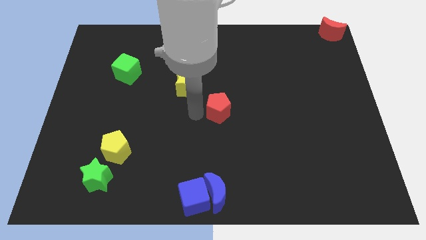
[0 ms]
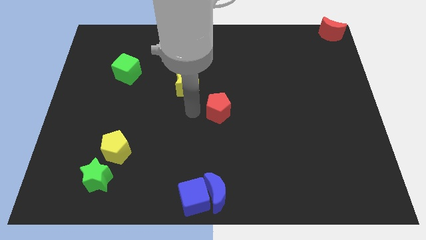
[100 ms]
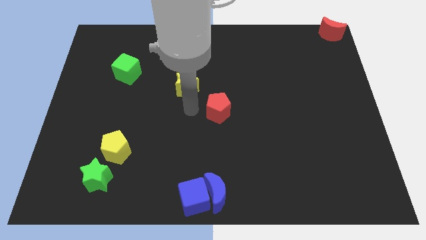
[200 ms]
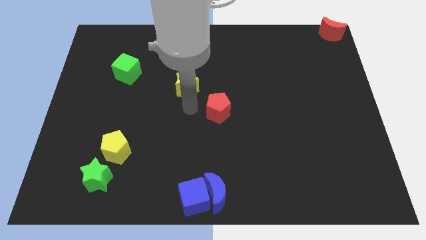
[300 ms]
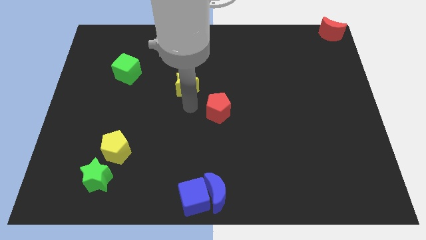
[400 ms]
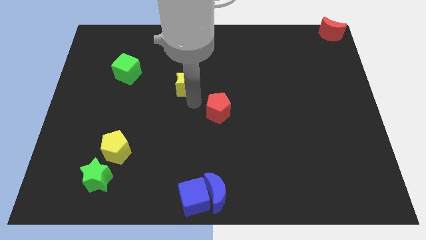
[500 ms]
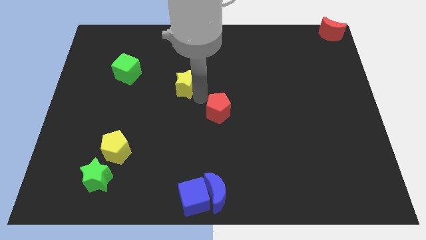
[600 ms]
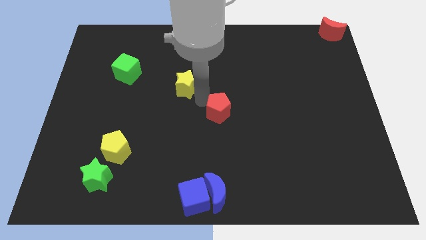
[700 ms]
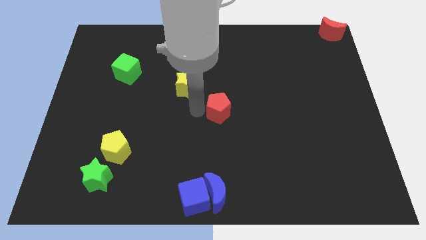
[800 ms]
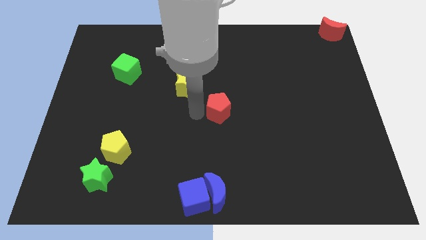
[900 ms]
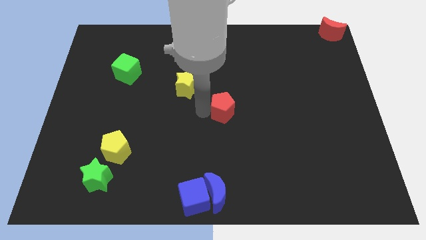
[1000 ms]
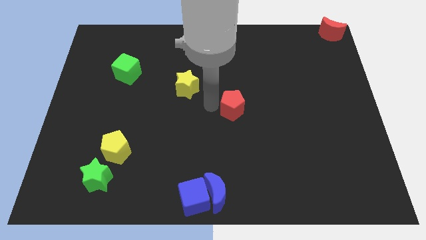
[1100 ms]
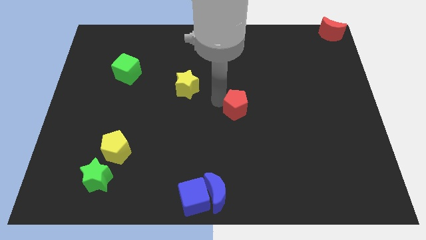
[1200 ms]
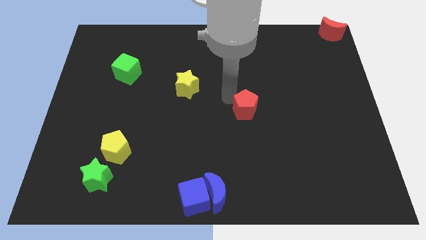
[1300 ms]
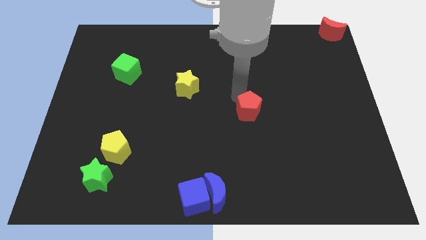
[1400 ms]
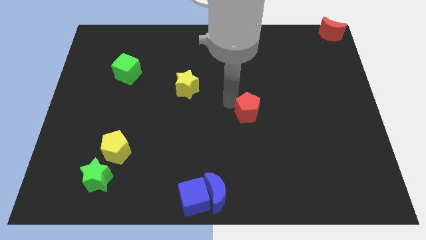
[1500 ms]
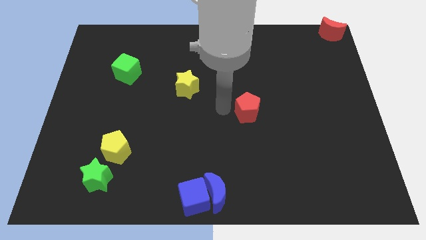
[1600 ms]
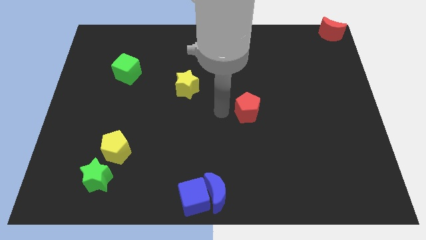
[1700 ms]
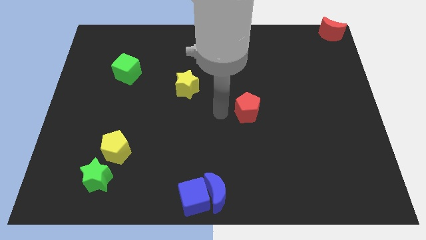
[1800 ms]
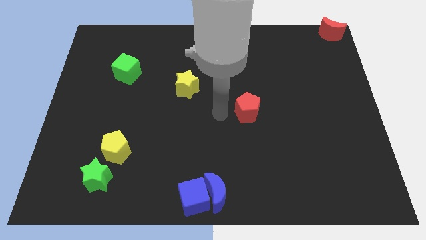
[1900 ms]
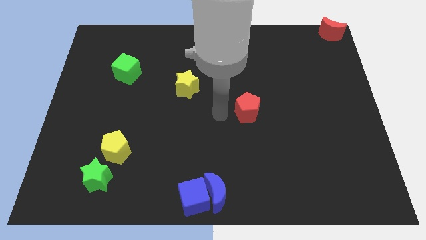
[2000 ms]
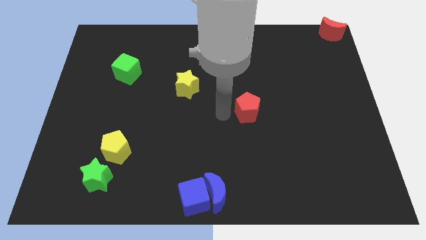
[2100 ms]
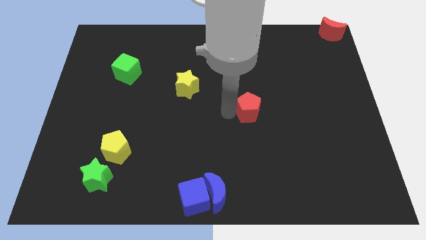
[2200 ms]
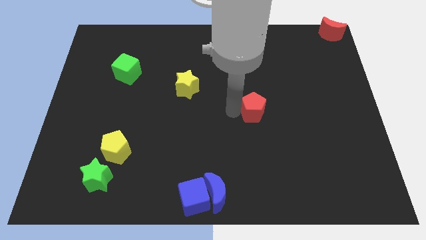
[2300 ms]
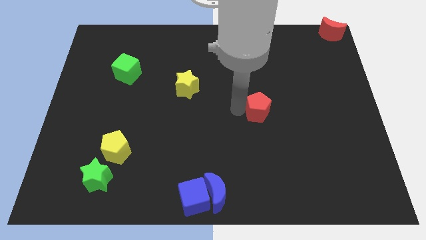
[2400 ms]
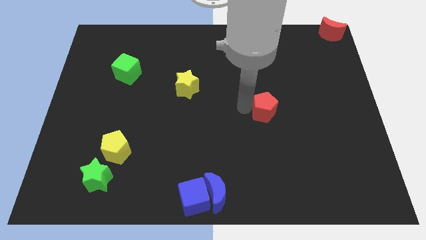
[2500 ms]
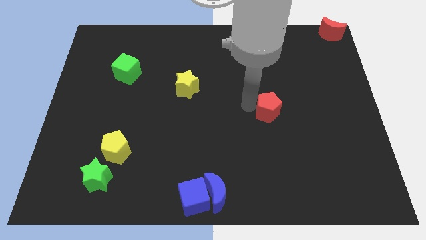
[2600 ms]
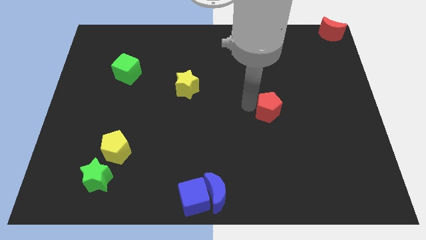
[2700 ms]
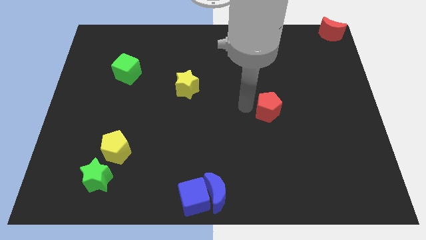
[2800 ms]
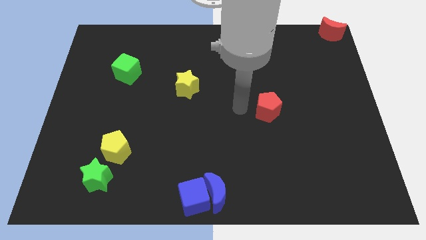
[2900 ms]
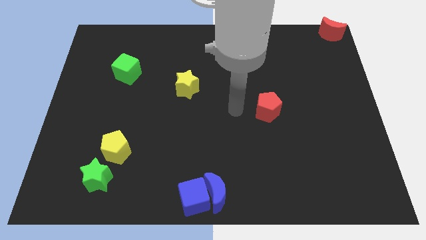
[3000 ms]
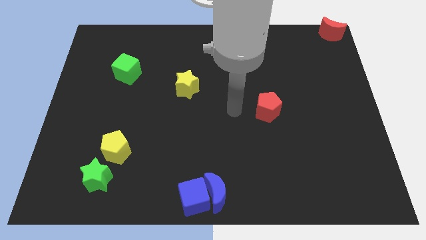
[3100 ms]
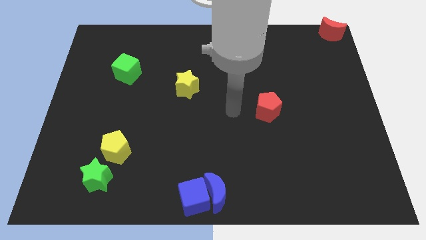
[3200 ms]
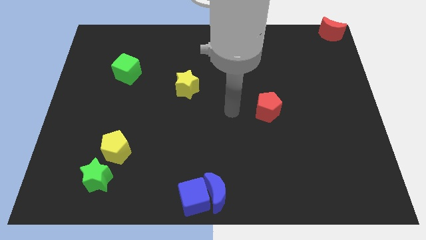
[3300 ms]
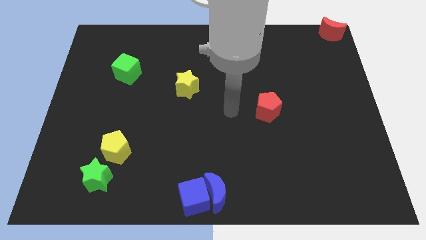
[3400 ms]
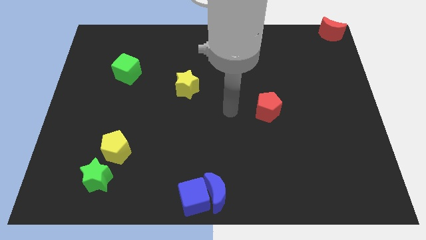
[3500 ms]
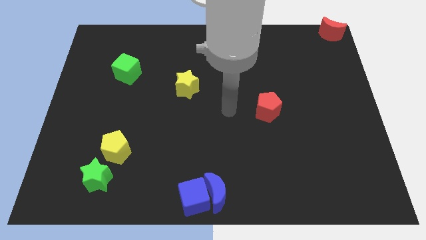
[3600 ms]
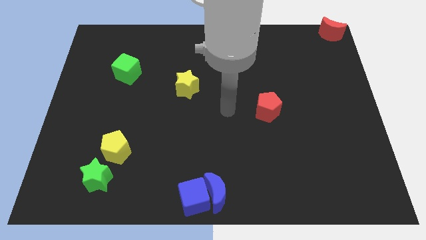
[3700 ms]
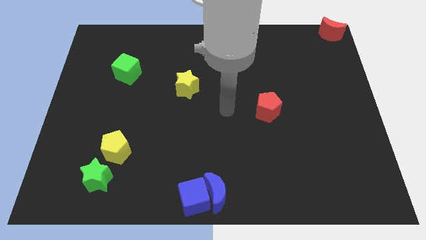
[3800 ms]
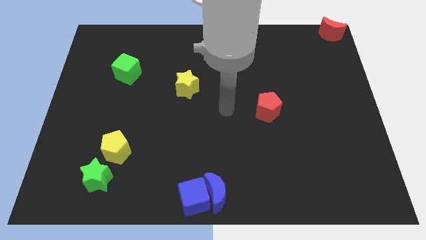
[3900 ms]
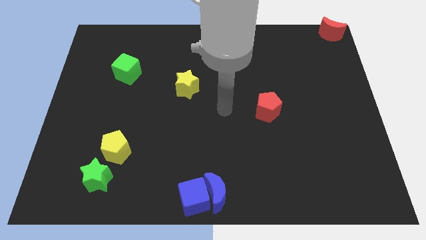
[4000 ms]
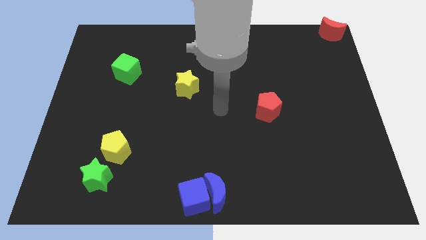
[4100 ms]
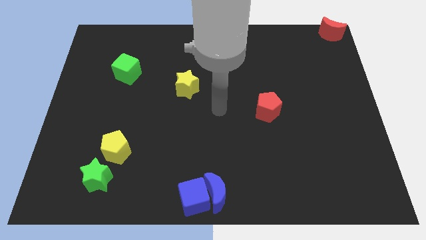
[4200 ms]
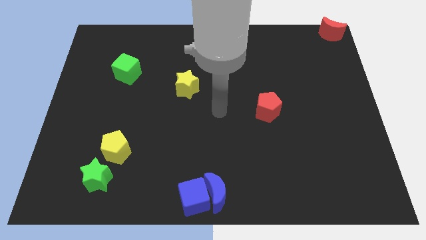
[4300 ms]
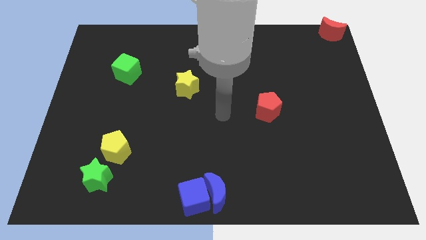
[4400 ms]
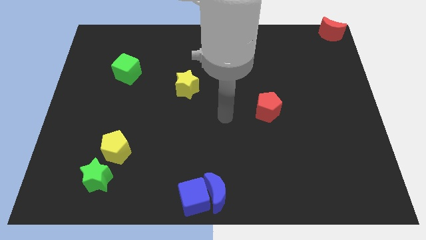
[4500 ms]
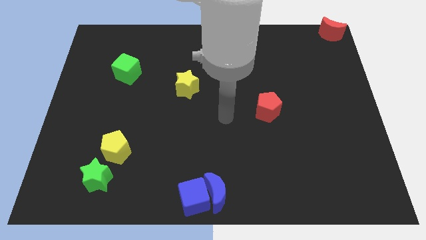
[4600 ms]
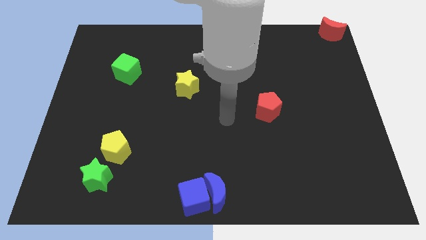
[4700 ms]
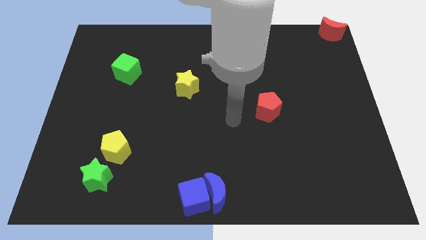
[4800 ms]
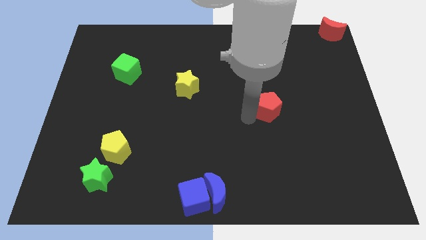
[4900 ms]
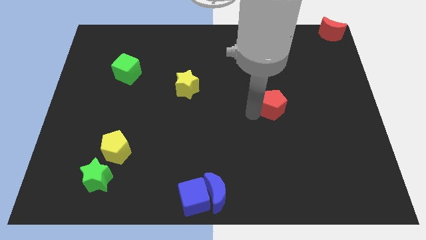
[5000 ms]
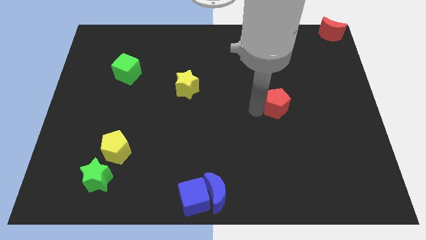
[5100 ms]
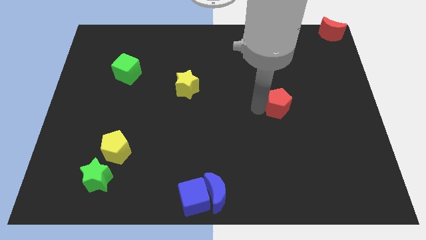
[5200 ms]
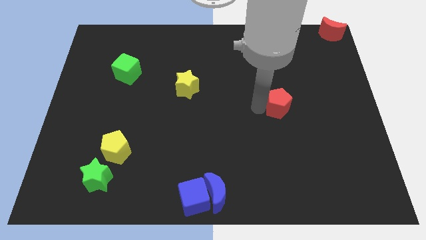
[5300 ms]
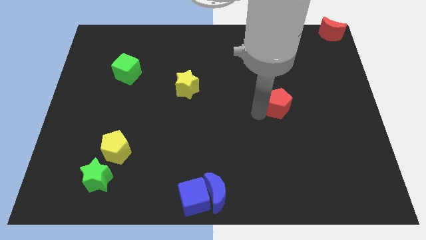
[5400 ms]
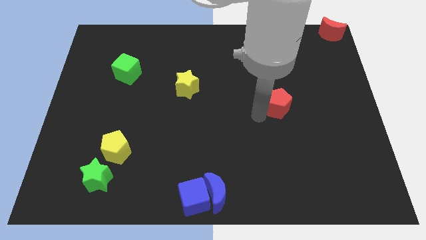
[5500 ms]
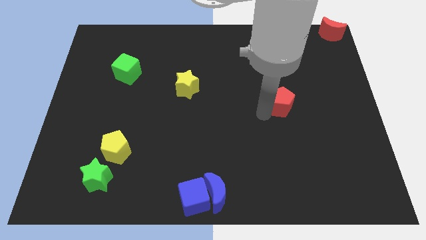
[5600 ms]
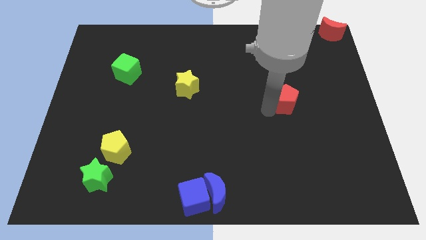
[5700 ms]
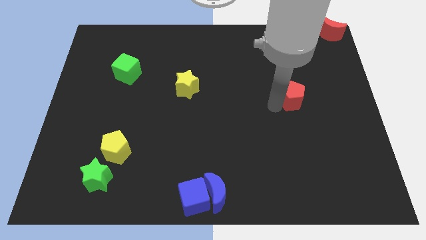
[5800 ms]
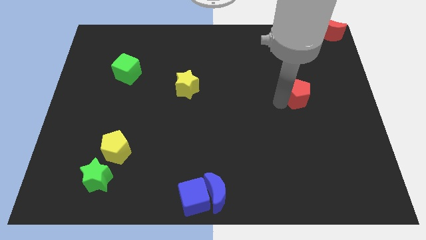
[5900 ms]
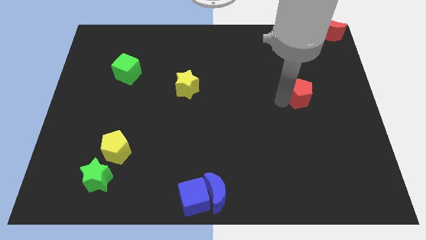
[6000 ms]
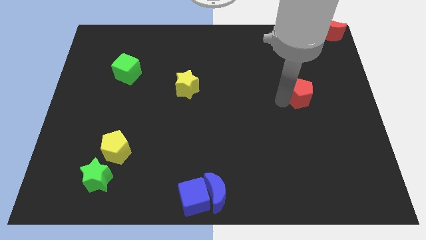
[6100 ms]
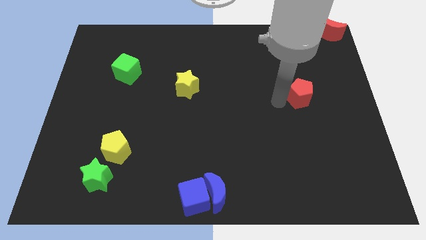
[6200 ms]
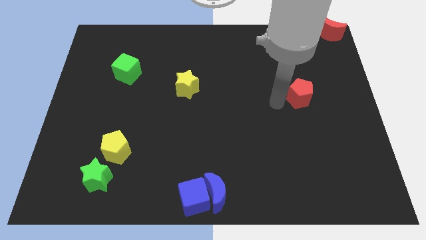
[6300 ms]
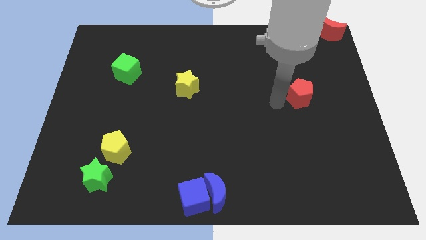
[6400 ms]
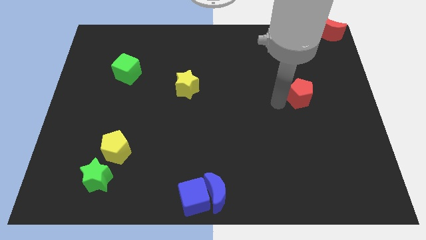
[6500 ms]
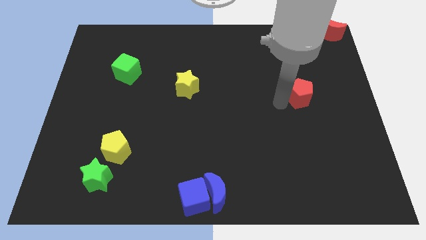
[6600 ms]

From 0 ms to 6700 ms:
place the red pentagon diagonally below the red crescent

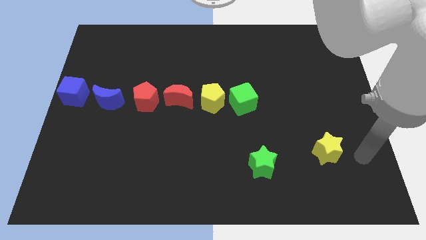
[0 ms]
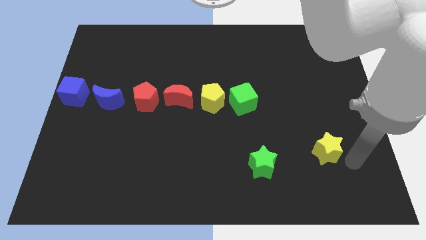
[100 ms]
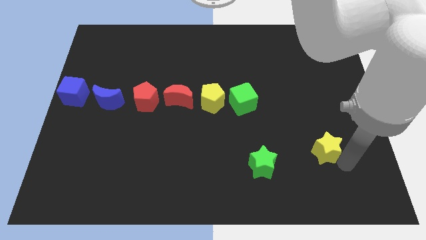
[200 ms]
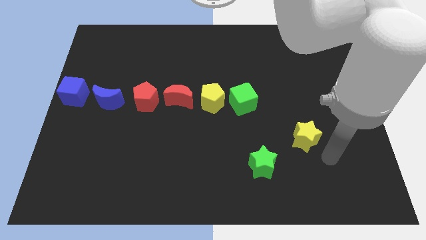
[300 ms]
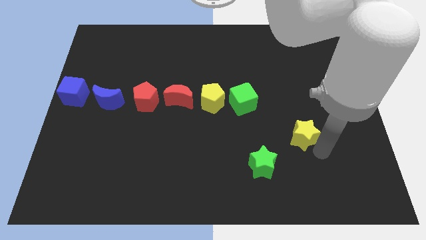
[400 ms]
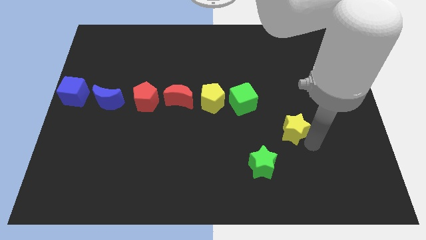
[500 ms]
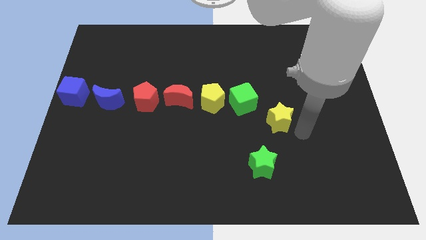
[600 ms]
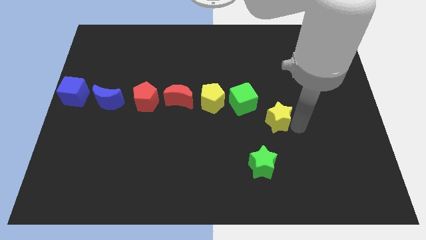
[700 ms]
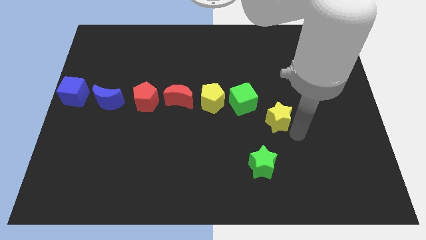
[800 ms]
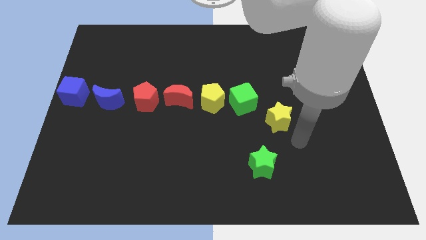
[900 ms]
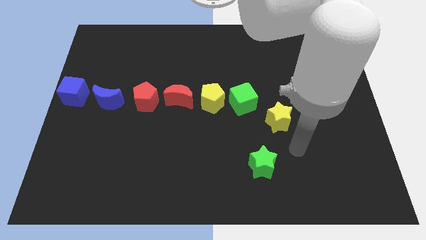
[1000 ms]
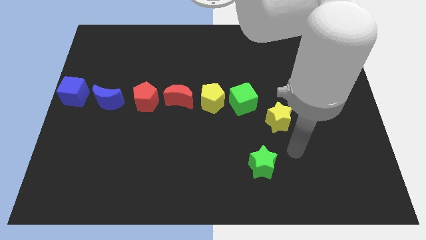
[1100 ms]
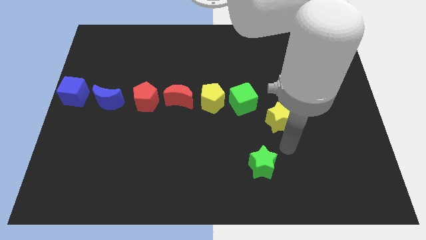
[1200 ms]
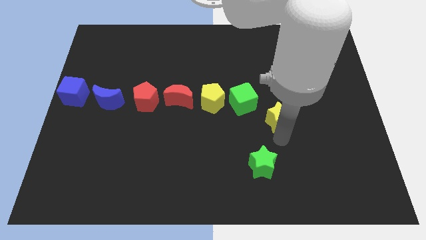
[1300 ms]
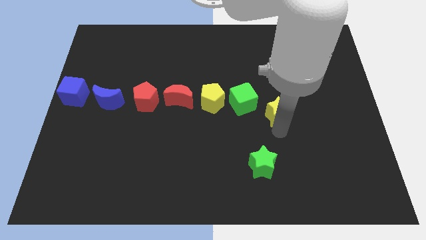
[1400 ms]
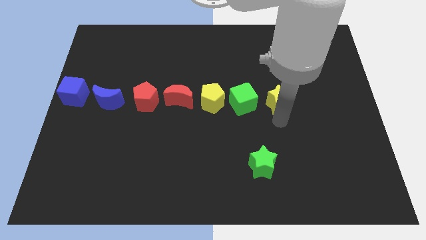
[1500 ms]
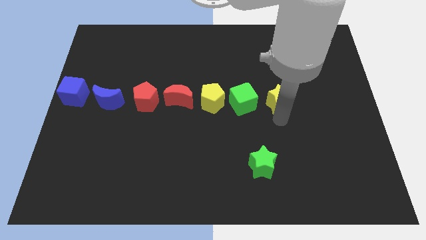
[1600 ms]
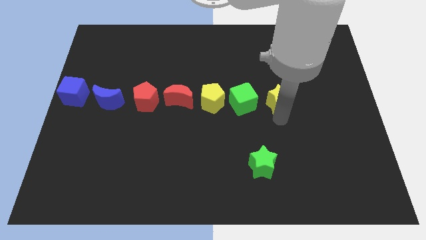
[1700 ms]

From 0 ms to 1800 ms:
move the yellow star to the right side of the green cube

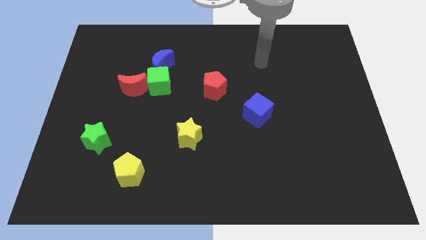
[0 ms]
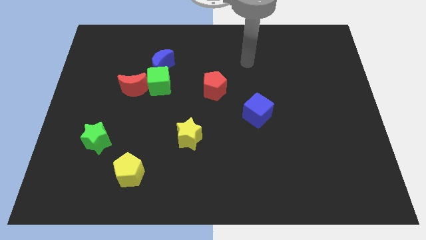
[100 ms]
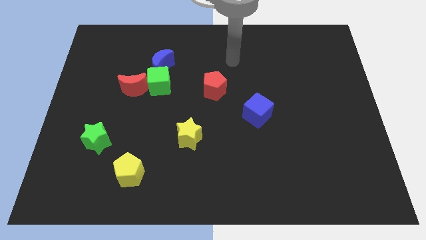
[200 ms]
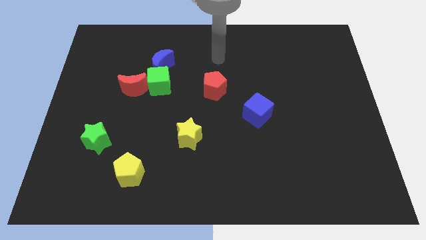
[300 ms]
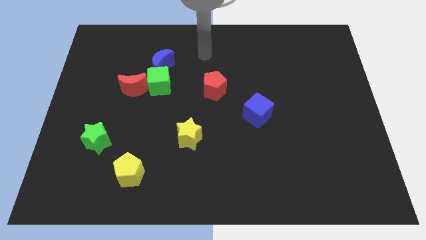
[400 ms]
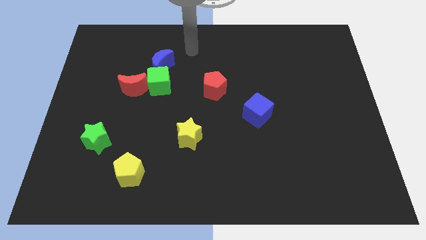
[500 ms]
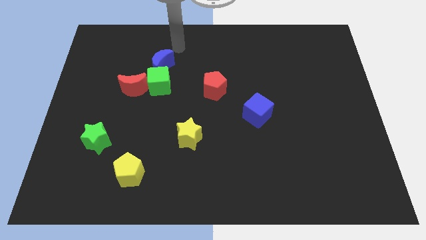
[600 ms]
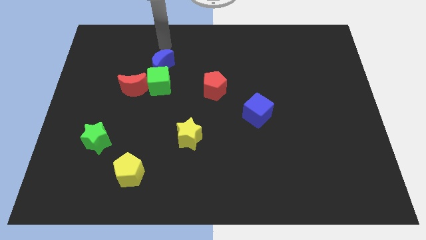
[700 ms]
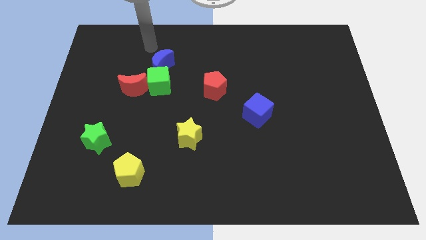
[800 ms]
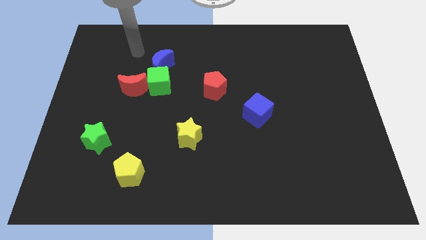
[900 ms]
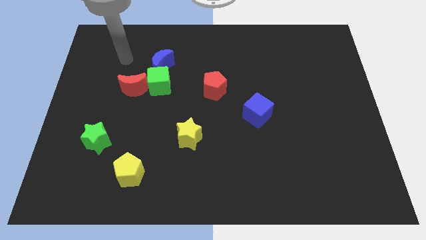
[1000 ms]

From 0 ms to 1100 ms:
place your arm to the left side of the blue moon
